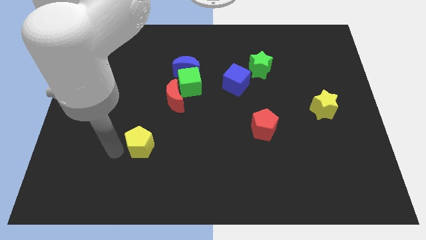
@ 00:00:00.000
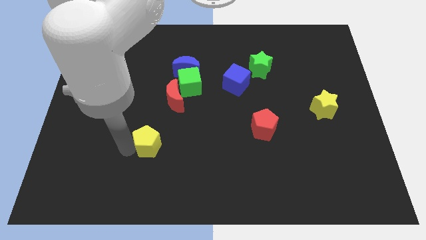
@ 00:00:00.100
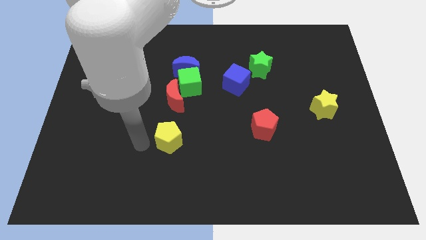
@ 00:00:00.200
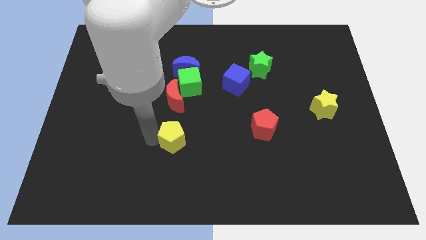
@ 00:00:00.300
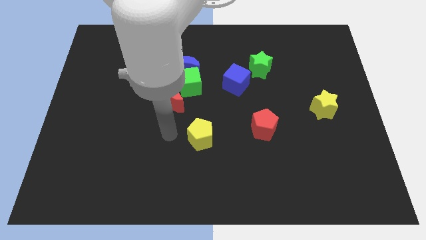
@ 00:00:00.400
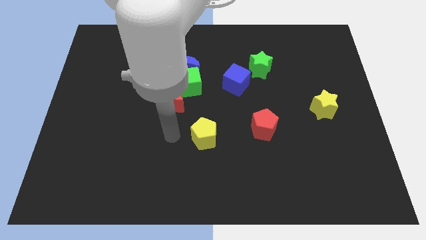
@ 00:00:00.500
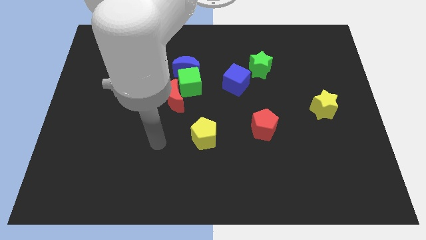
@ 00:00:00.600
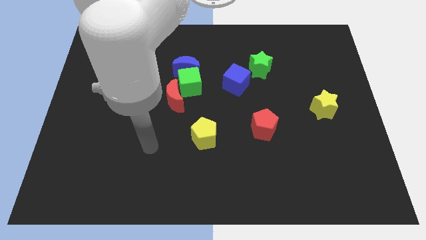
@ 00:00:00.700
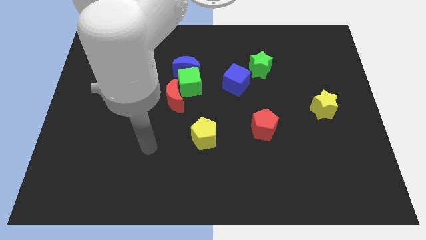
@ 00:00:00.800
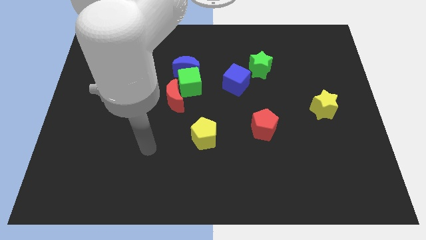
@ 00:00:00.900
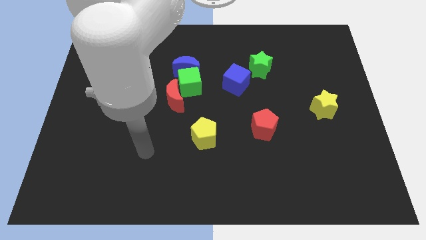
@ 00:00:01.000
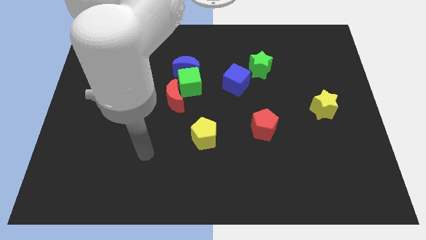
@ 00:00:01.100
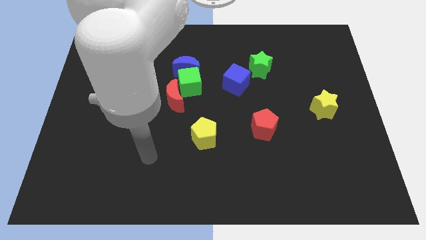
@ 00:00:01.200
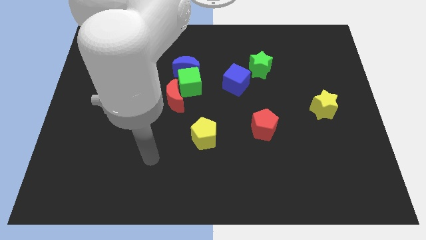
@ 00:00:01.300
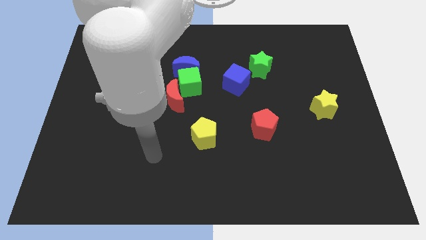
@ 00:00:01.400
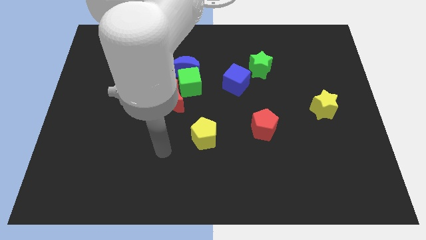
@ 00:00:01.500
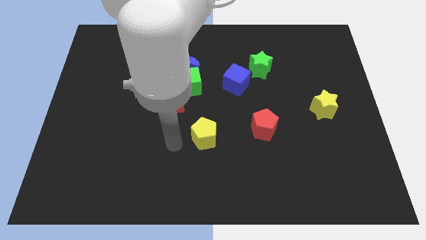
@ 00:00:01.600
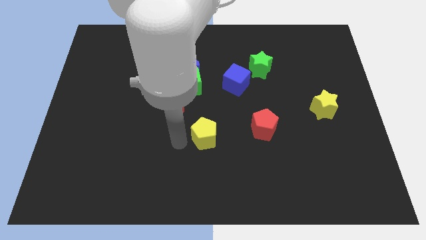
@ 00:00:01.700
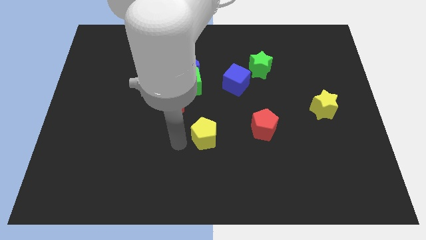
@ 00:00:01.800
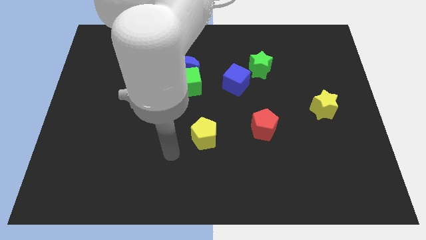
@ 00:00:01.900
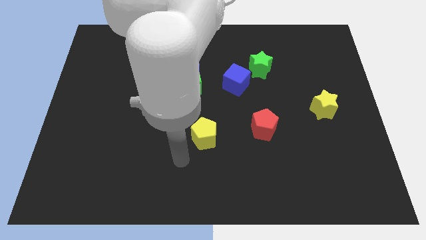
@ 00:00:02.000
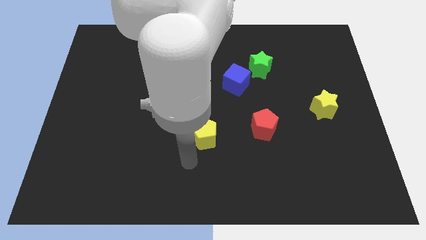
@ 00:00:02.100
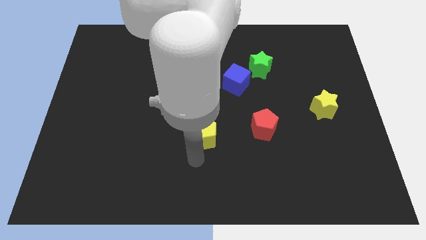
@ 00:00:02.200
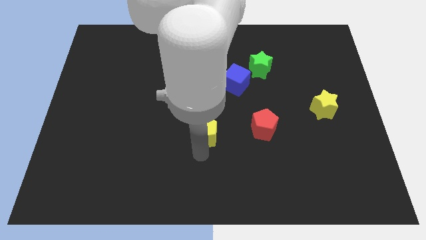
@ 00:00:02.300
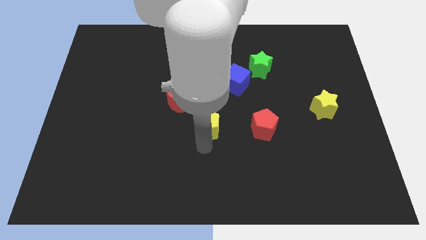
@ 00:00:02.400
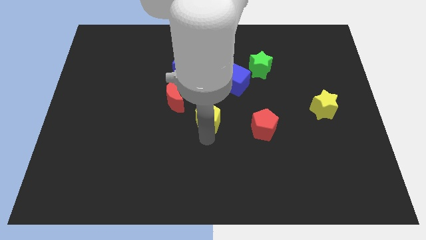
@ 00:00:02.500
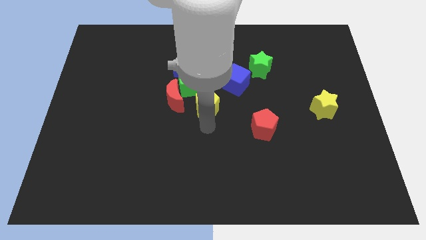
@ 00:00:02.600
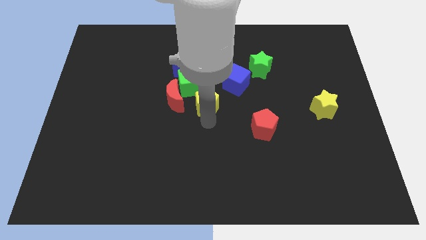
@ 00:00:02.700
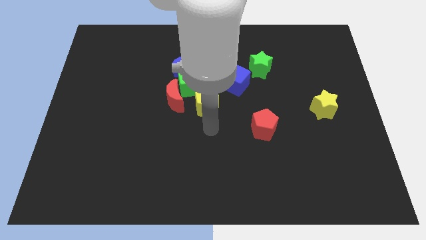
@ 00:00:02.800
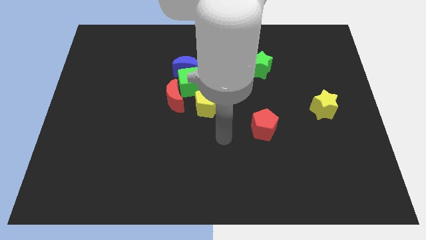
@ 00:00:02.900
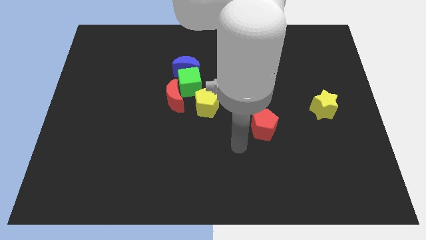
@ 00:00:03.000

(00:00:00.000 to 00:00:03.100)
place the yellow pentagon to the bottom right of the green cube

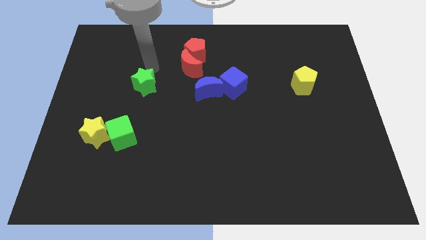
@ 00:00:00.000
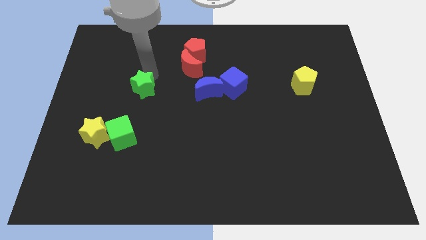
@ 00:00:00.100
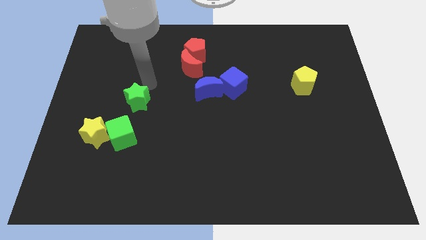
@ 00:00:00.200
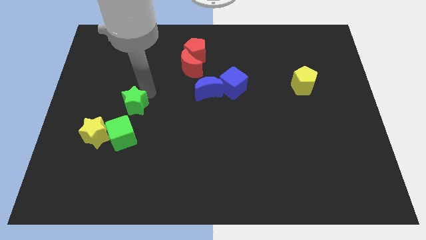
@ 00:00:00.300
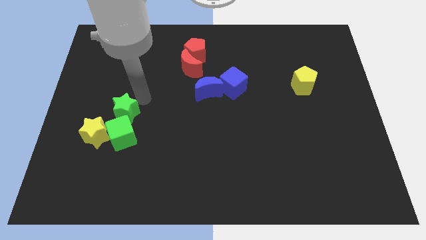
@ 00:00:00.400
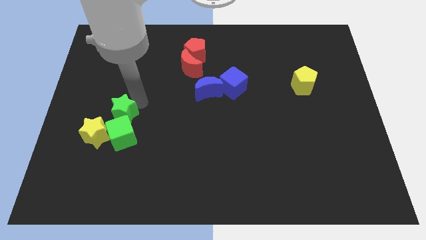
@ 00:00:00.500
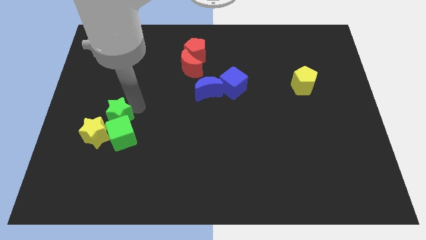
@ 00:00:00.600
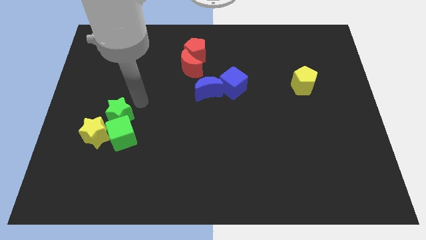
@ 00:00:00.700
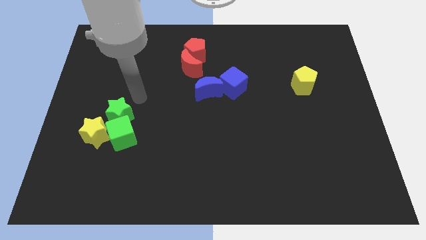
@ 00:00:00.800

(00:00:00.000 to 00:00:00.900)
place the green star above the green cube

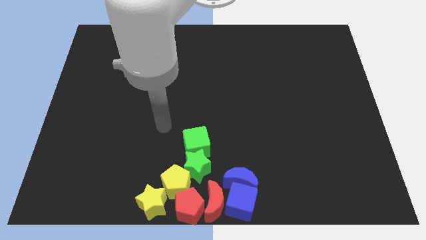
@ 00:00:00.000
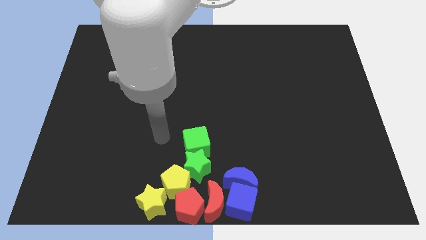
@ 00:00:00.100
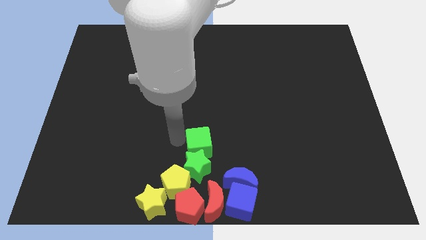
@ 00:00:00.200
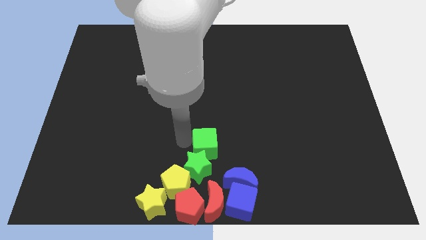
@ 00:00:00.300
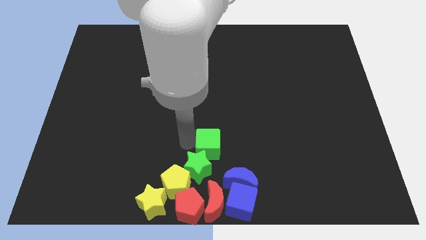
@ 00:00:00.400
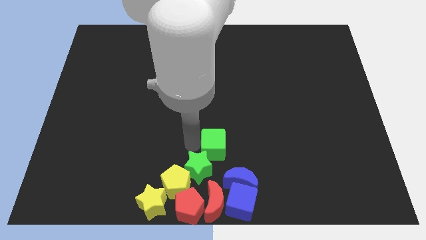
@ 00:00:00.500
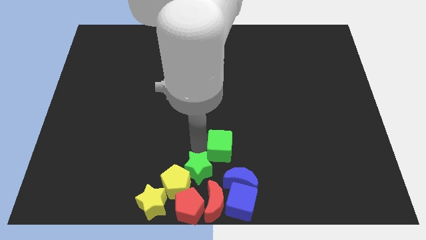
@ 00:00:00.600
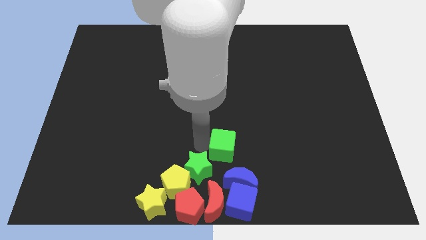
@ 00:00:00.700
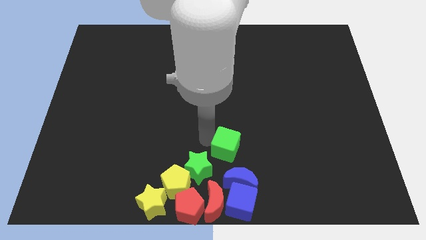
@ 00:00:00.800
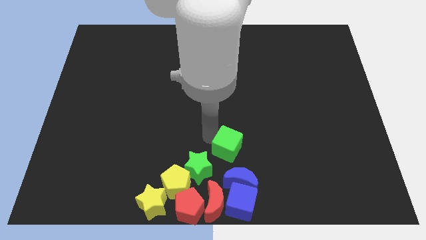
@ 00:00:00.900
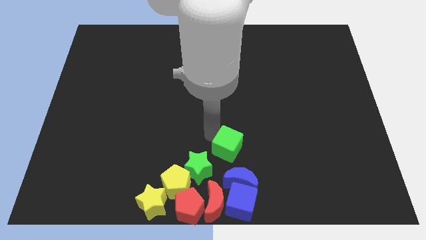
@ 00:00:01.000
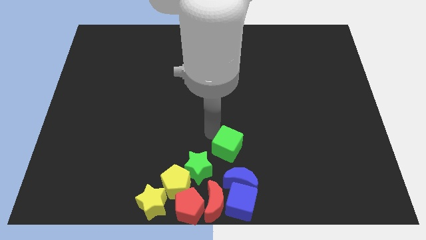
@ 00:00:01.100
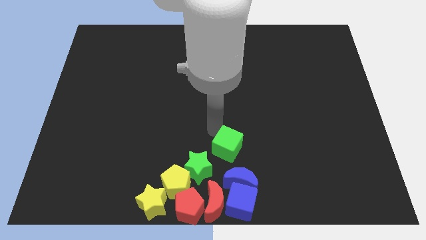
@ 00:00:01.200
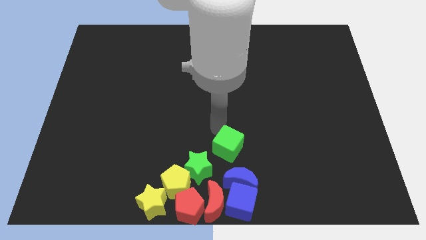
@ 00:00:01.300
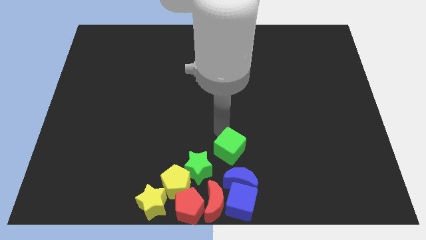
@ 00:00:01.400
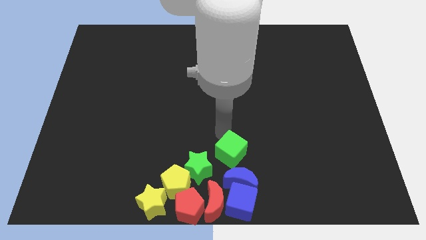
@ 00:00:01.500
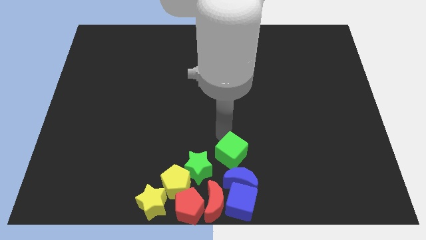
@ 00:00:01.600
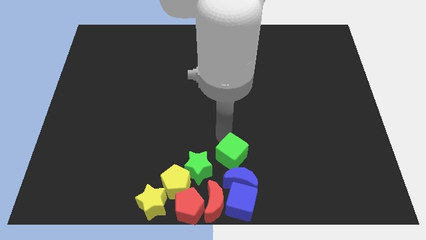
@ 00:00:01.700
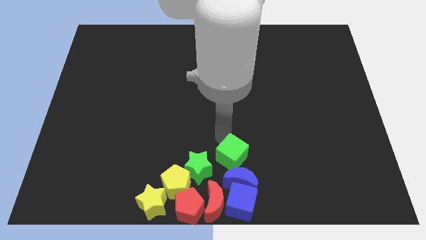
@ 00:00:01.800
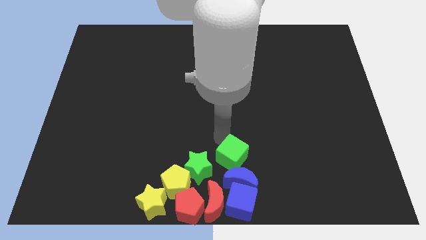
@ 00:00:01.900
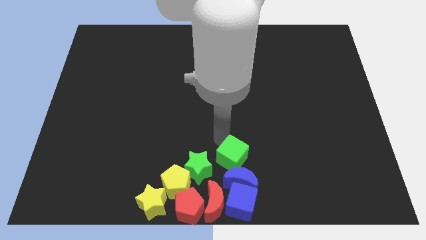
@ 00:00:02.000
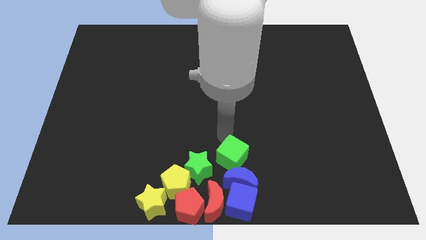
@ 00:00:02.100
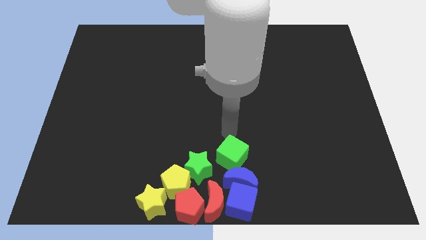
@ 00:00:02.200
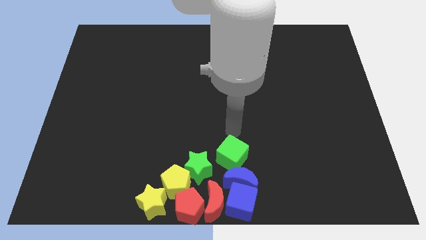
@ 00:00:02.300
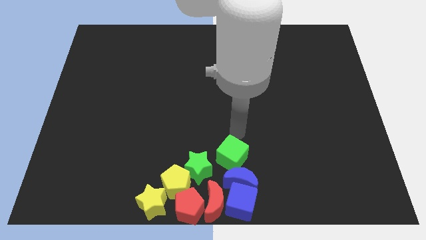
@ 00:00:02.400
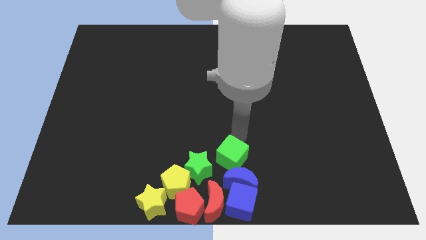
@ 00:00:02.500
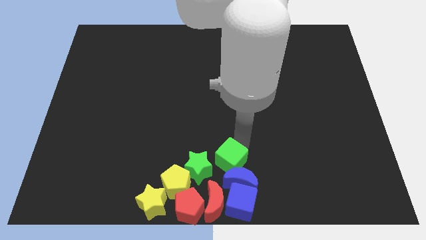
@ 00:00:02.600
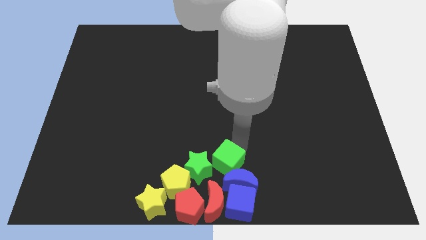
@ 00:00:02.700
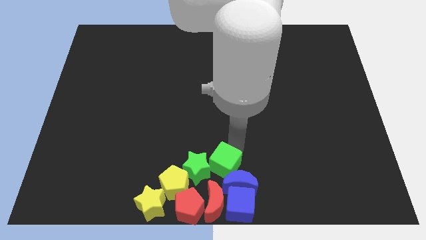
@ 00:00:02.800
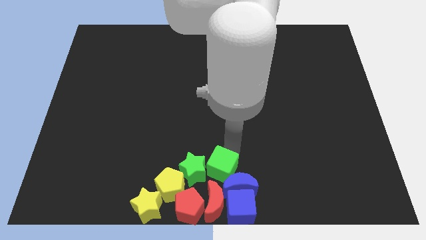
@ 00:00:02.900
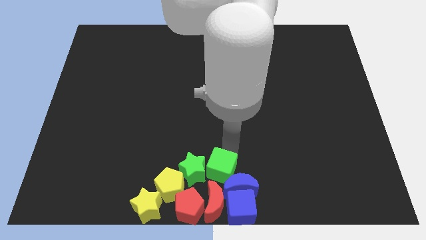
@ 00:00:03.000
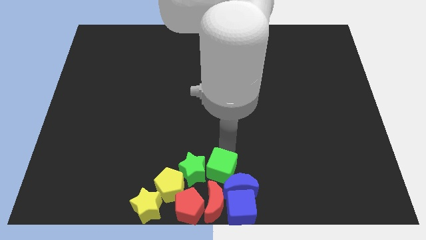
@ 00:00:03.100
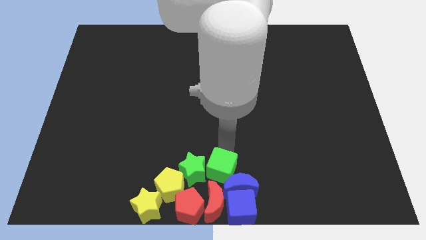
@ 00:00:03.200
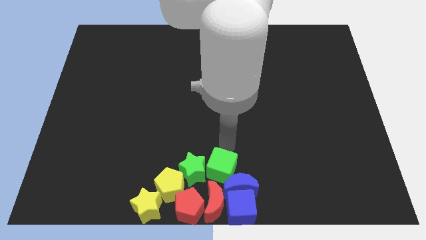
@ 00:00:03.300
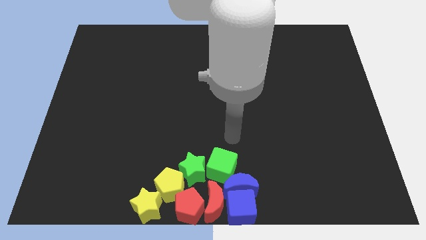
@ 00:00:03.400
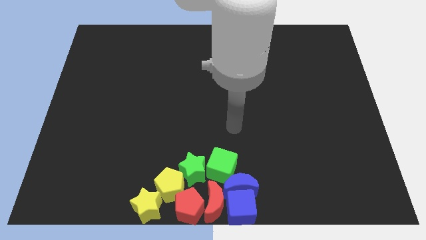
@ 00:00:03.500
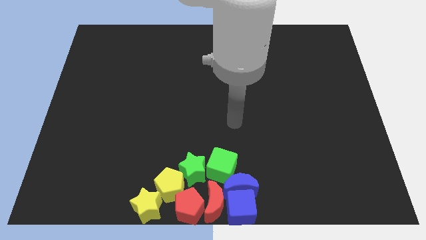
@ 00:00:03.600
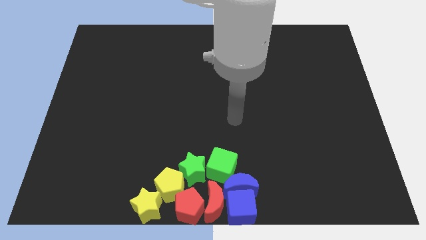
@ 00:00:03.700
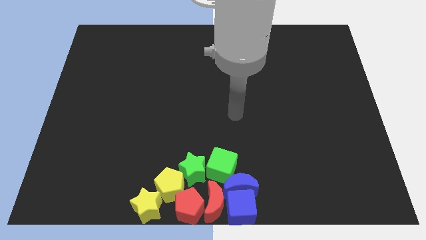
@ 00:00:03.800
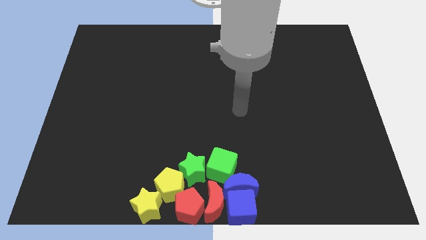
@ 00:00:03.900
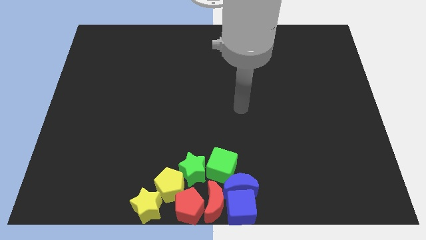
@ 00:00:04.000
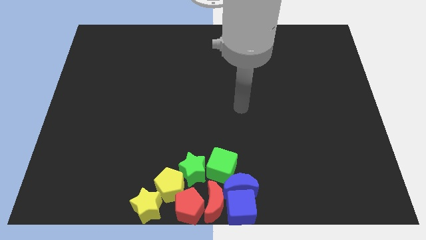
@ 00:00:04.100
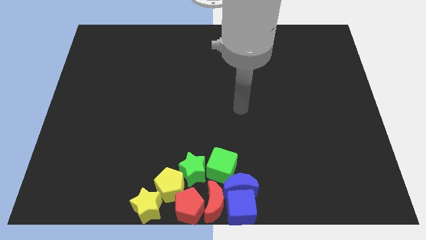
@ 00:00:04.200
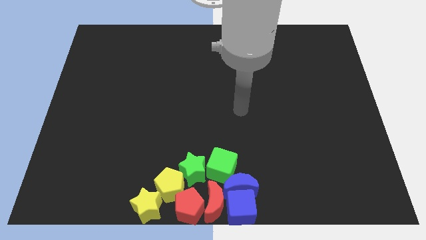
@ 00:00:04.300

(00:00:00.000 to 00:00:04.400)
move the green cube right beside the green star

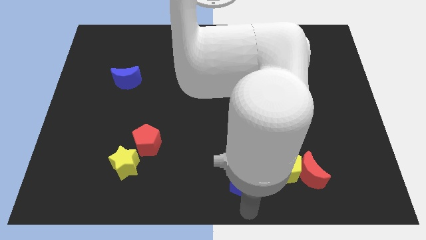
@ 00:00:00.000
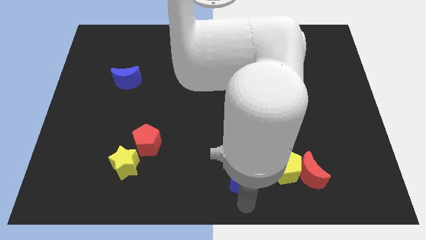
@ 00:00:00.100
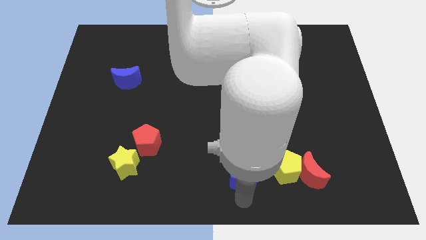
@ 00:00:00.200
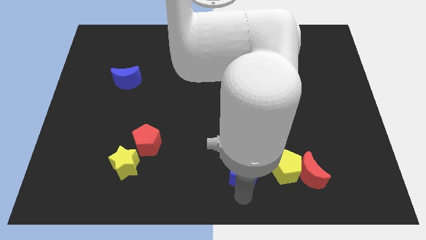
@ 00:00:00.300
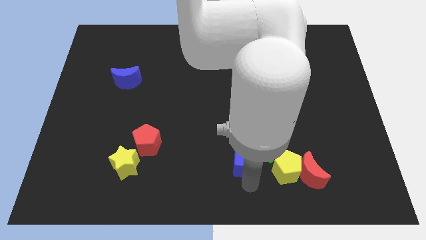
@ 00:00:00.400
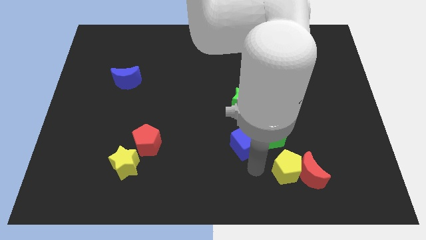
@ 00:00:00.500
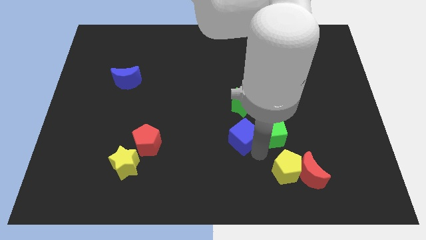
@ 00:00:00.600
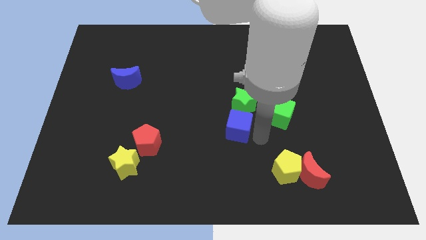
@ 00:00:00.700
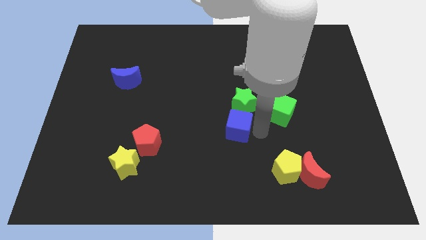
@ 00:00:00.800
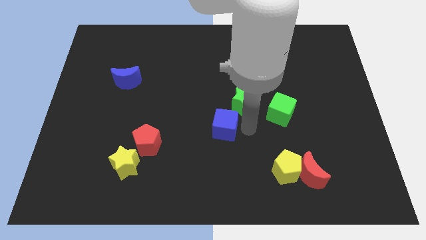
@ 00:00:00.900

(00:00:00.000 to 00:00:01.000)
place the green cube above the yellow pentagon
